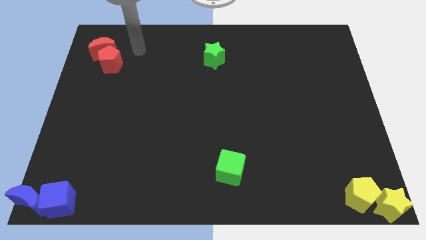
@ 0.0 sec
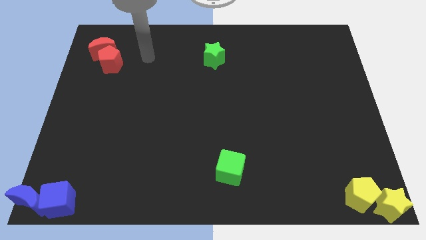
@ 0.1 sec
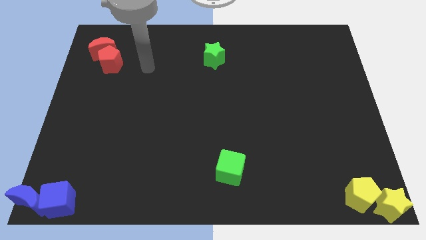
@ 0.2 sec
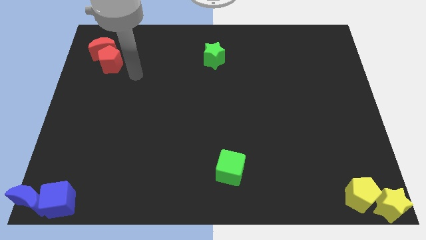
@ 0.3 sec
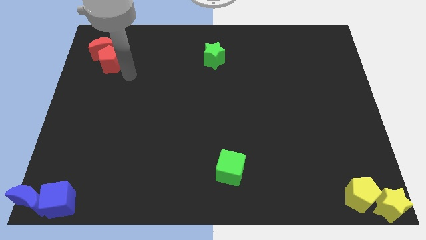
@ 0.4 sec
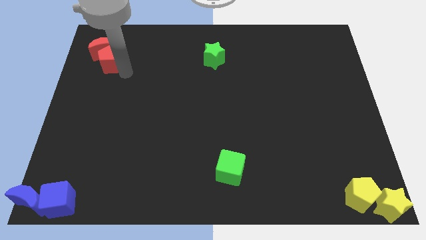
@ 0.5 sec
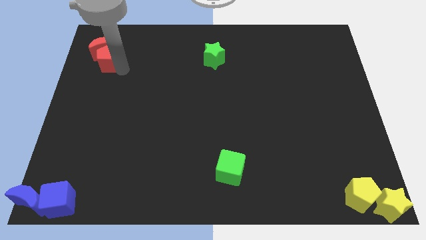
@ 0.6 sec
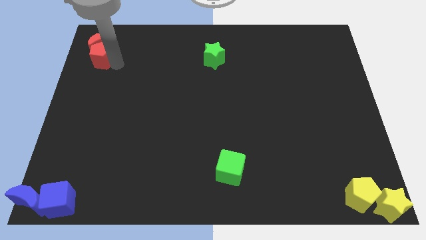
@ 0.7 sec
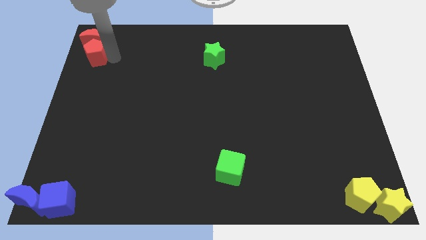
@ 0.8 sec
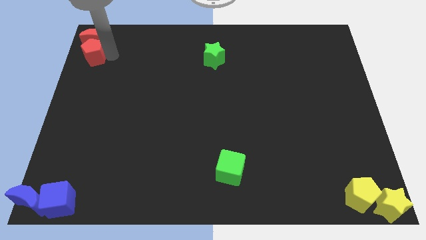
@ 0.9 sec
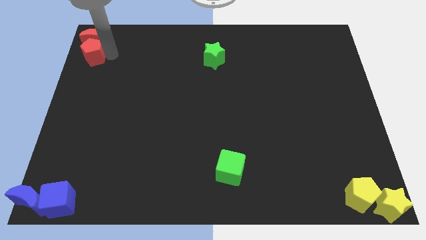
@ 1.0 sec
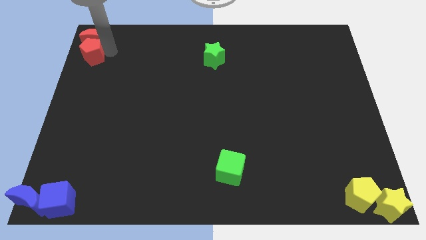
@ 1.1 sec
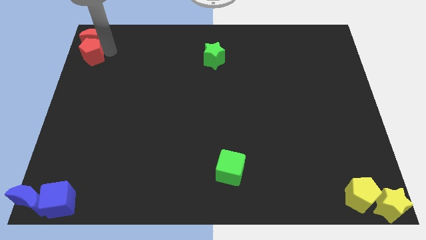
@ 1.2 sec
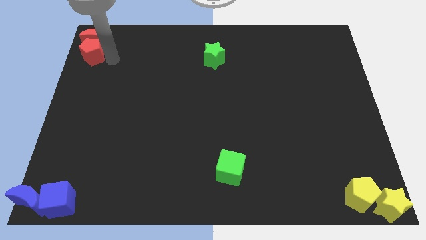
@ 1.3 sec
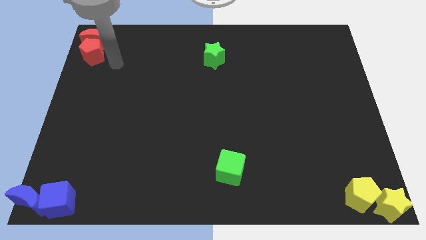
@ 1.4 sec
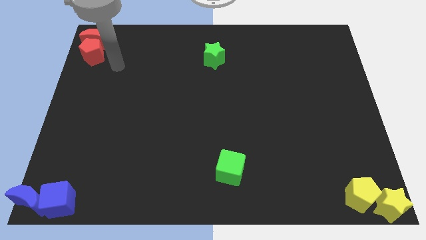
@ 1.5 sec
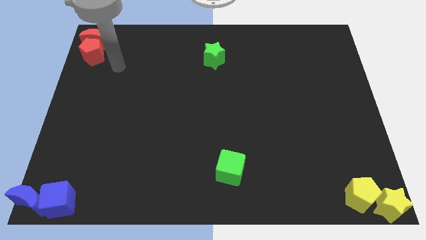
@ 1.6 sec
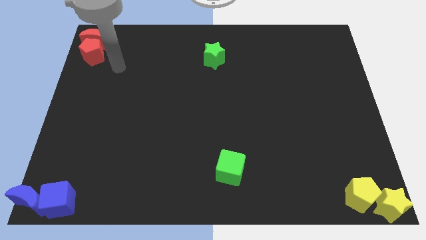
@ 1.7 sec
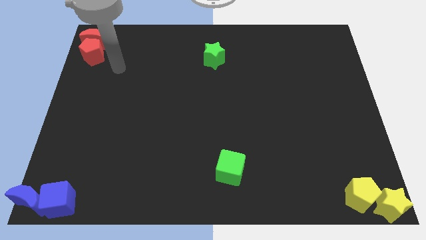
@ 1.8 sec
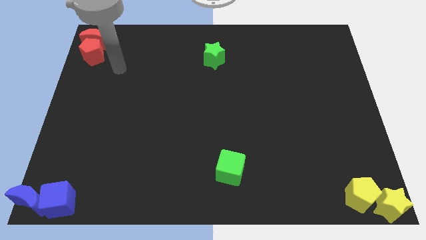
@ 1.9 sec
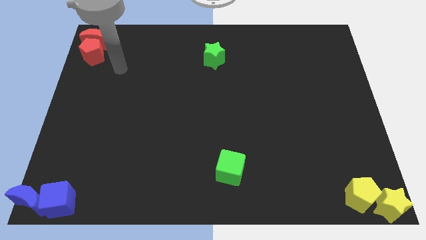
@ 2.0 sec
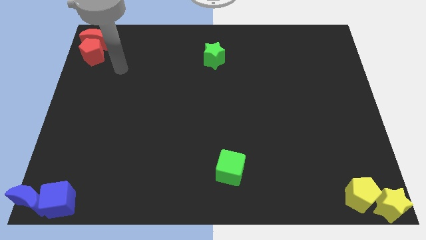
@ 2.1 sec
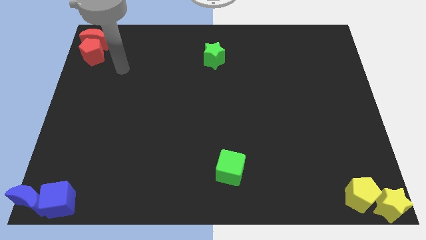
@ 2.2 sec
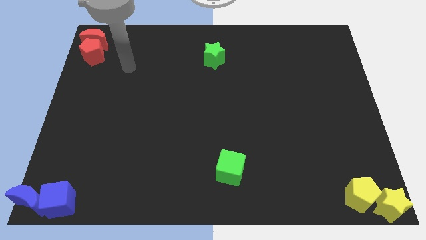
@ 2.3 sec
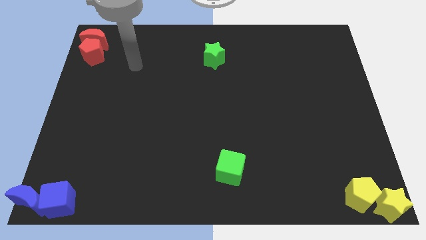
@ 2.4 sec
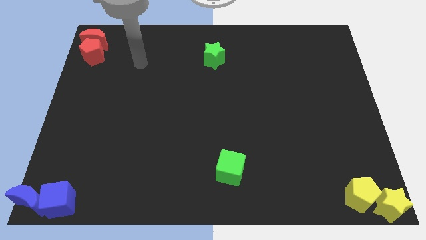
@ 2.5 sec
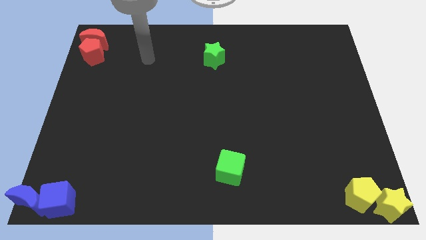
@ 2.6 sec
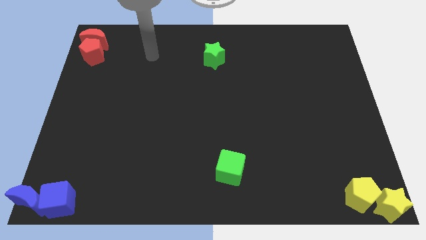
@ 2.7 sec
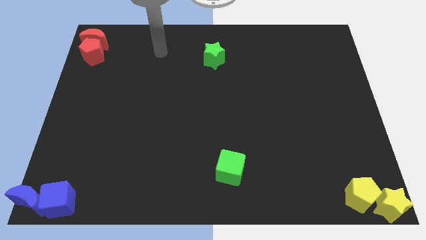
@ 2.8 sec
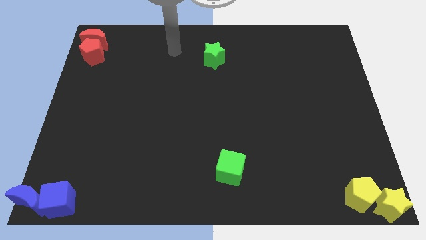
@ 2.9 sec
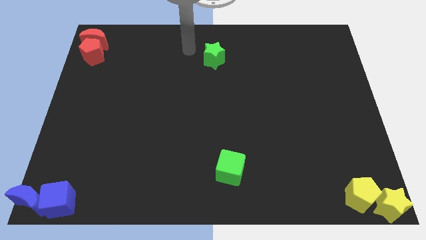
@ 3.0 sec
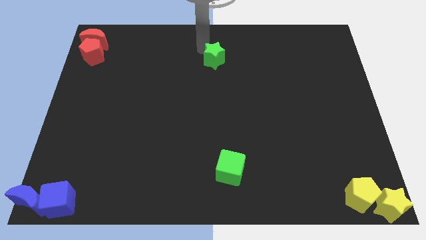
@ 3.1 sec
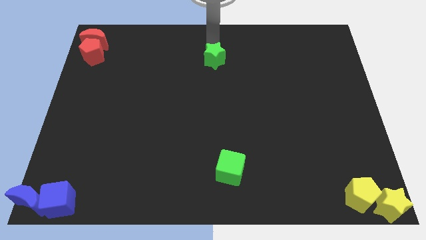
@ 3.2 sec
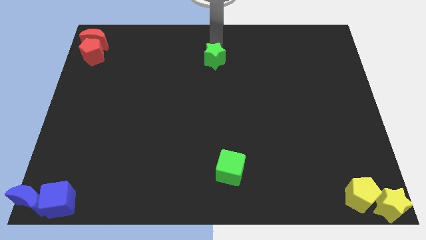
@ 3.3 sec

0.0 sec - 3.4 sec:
push the red blocks to the top left corner of the board

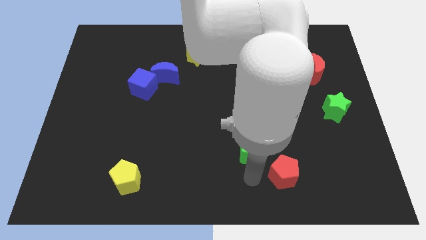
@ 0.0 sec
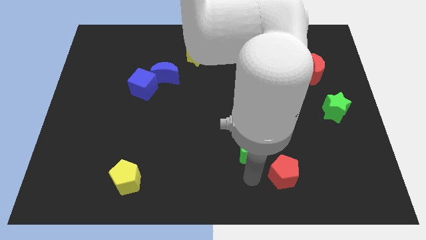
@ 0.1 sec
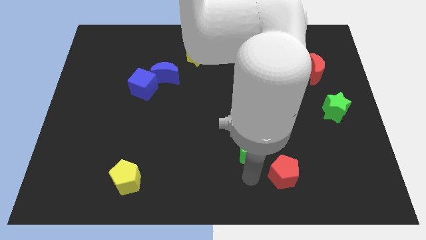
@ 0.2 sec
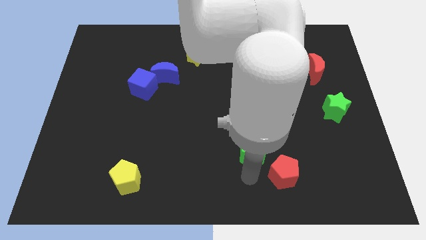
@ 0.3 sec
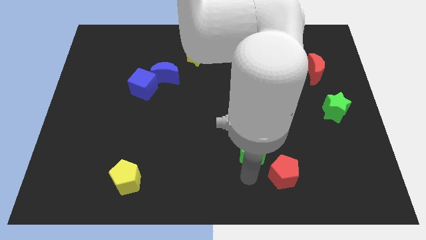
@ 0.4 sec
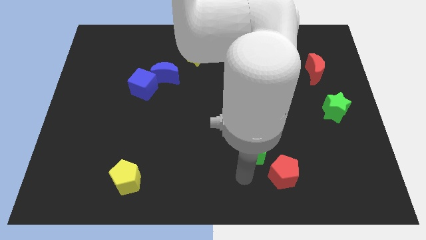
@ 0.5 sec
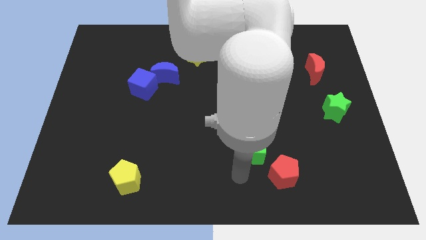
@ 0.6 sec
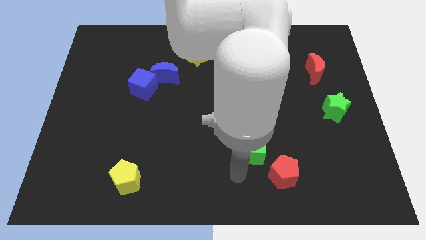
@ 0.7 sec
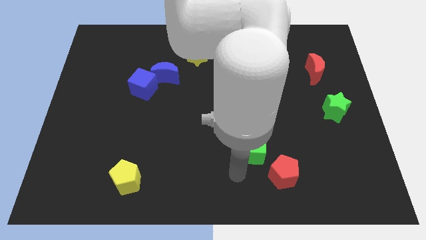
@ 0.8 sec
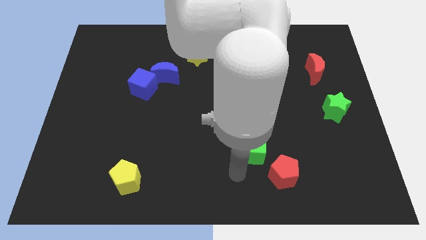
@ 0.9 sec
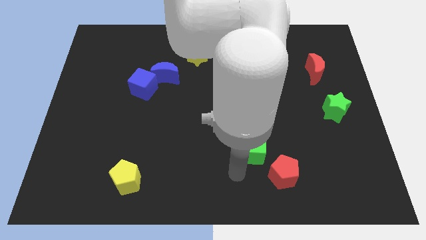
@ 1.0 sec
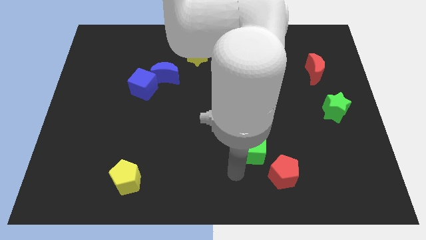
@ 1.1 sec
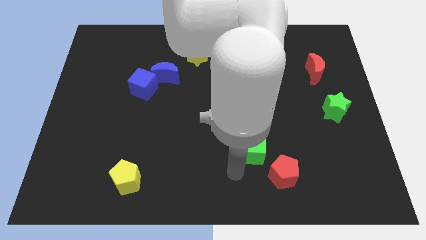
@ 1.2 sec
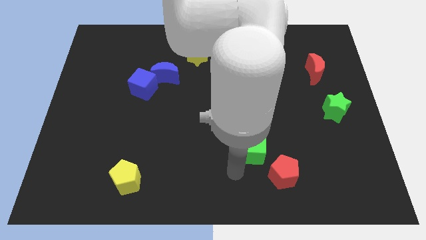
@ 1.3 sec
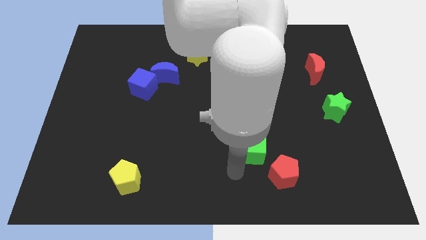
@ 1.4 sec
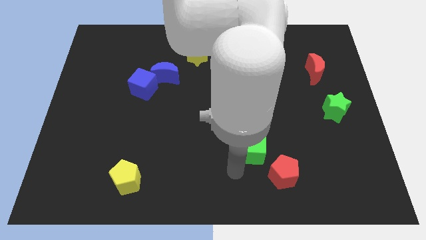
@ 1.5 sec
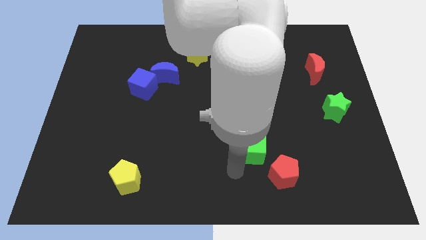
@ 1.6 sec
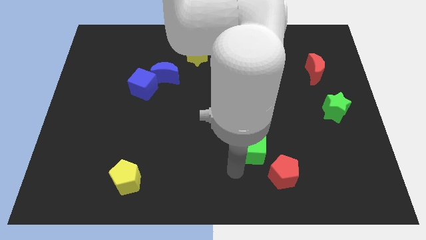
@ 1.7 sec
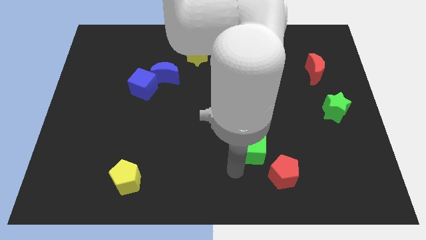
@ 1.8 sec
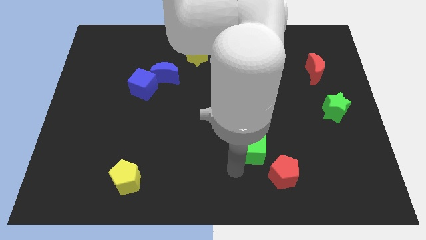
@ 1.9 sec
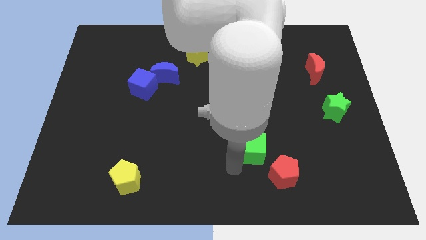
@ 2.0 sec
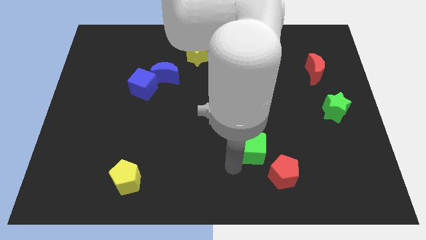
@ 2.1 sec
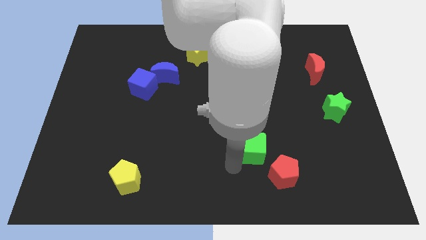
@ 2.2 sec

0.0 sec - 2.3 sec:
move your arm to the bottom of the green cube

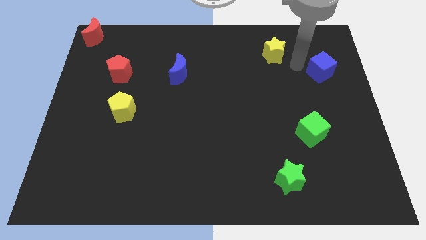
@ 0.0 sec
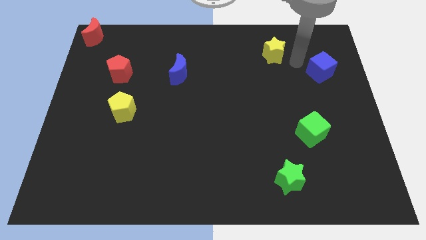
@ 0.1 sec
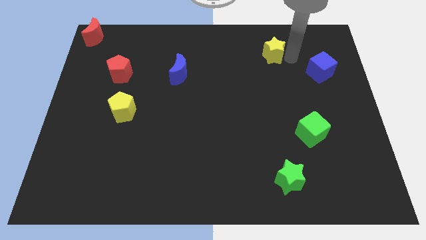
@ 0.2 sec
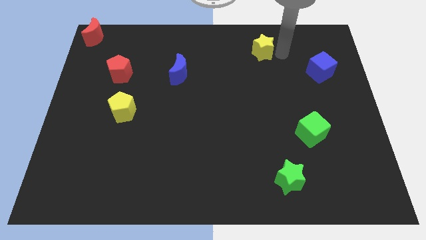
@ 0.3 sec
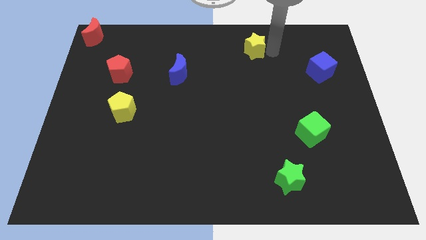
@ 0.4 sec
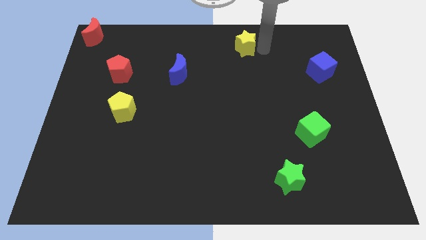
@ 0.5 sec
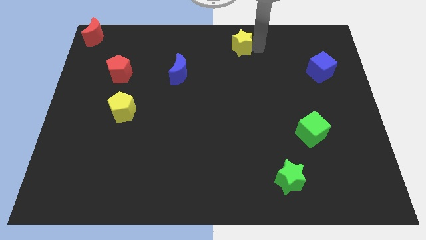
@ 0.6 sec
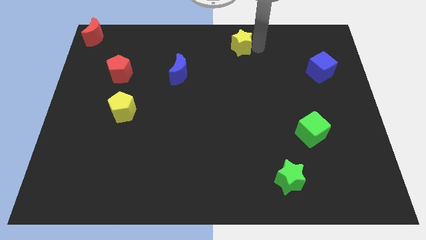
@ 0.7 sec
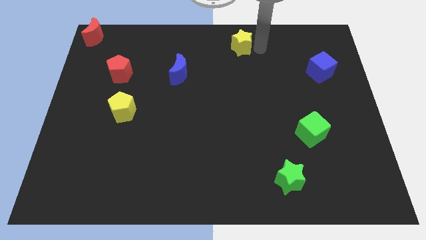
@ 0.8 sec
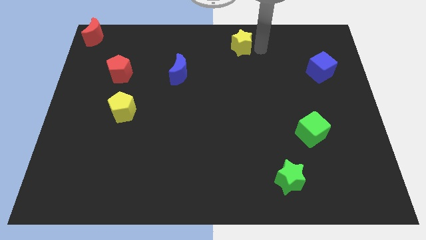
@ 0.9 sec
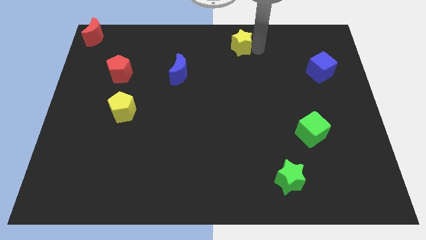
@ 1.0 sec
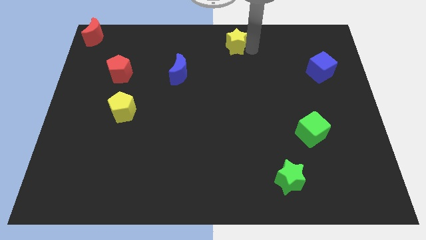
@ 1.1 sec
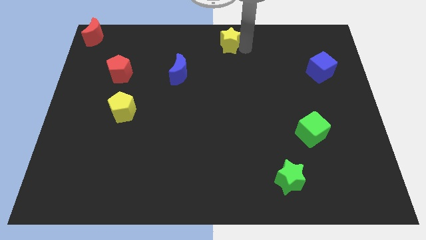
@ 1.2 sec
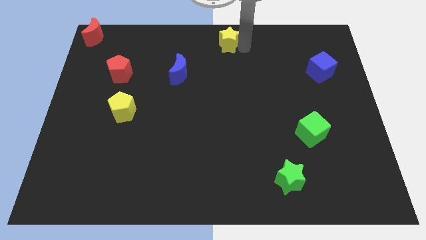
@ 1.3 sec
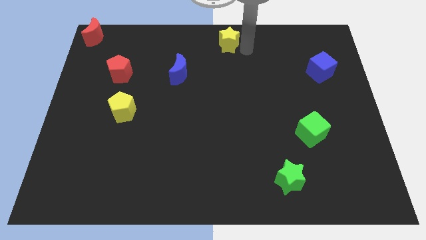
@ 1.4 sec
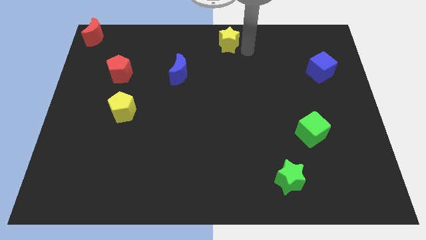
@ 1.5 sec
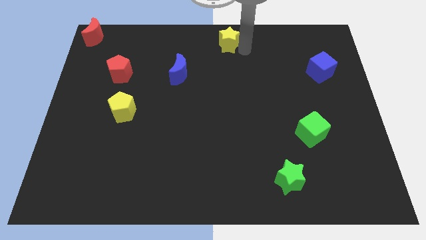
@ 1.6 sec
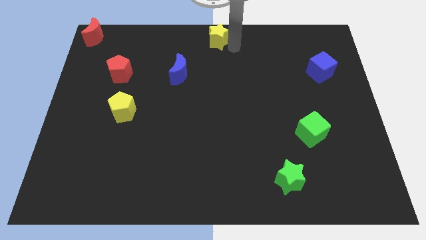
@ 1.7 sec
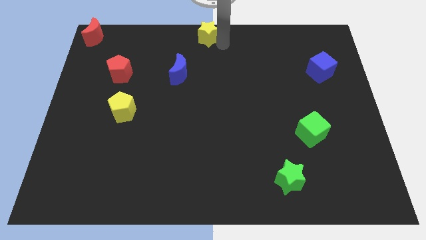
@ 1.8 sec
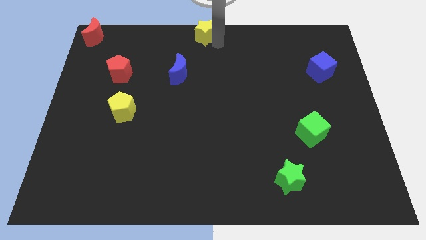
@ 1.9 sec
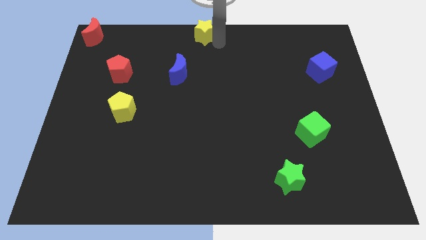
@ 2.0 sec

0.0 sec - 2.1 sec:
push the yellow star to the top center of the board

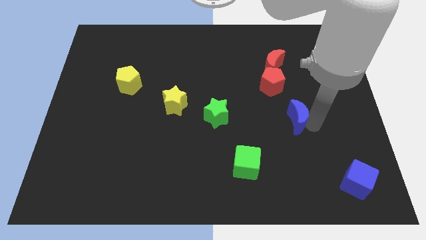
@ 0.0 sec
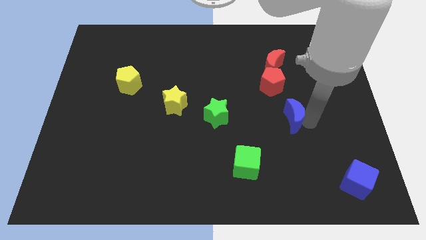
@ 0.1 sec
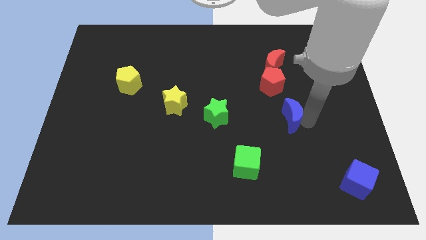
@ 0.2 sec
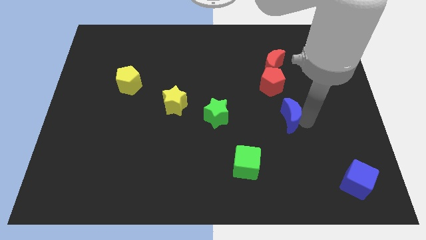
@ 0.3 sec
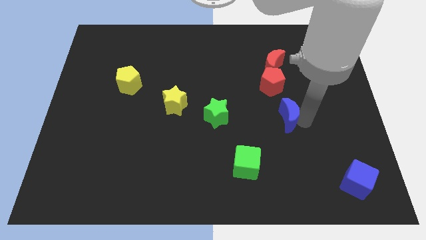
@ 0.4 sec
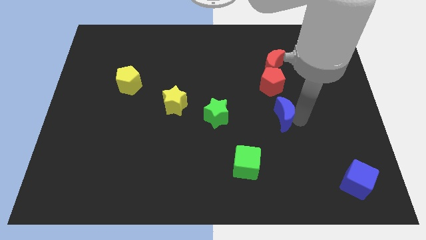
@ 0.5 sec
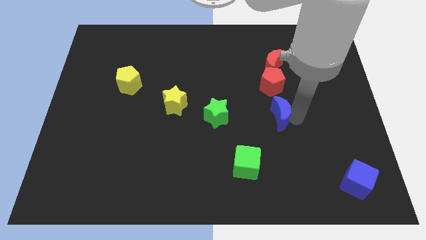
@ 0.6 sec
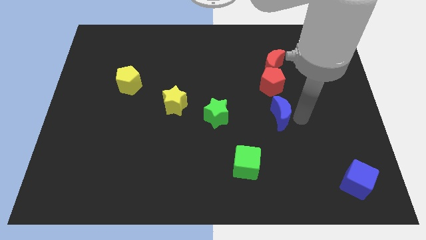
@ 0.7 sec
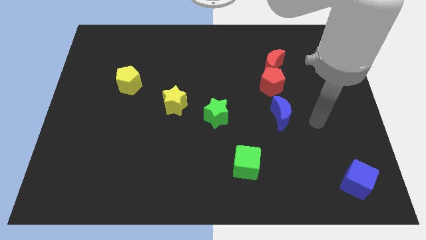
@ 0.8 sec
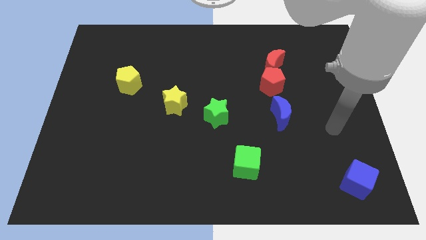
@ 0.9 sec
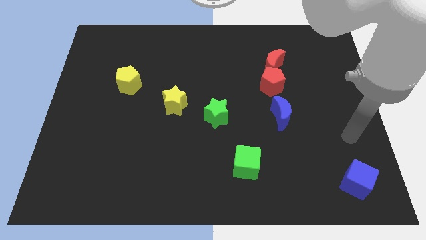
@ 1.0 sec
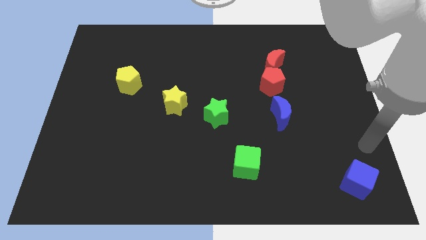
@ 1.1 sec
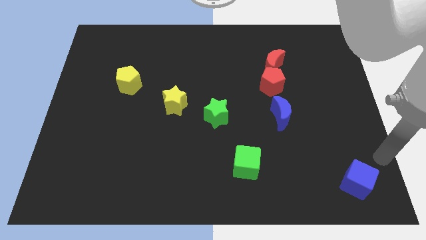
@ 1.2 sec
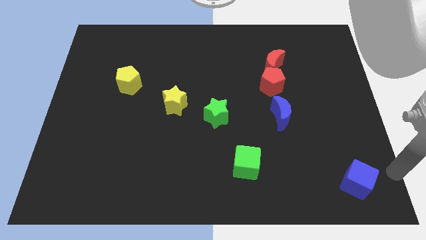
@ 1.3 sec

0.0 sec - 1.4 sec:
move the blue moon to the bottom side of the red pentagon
